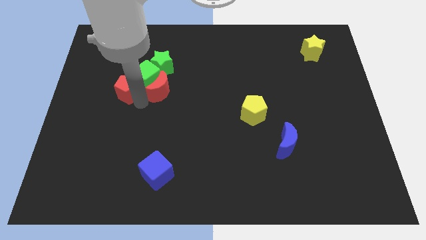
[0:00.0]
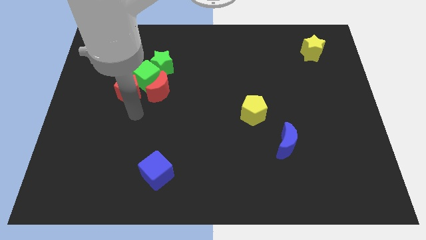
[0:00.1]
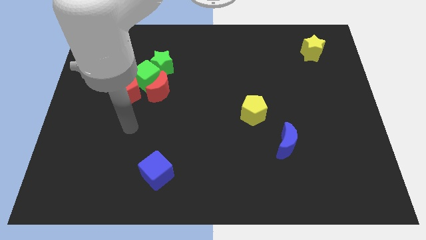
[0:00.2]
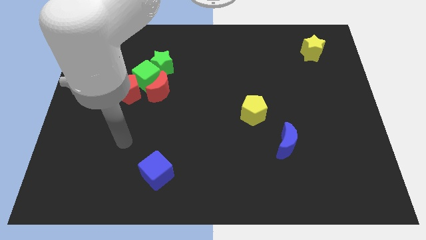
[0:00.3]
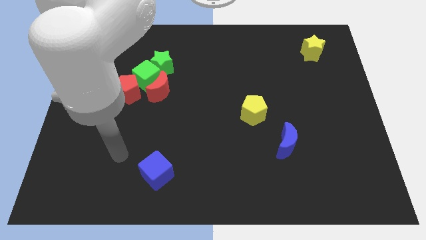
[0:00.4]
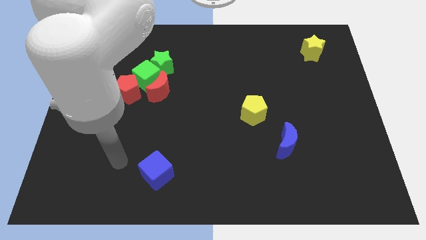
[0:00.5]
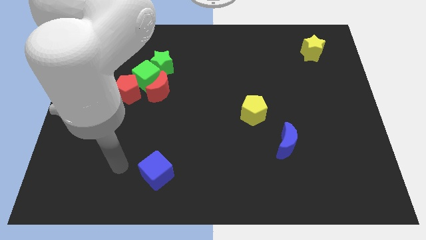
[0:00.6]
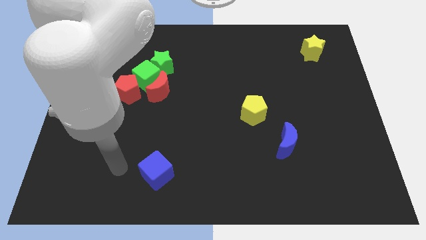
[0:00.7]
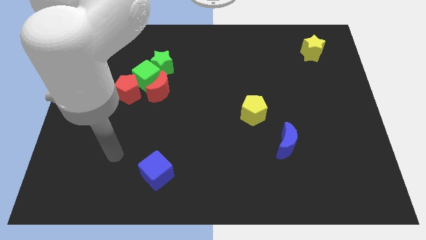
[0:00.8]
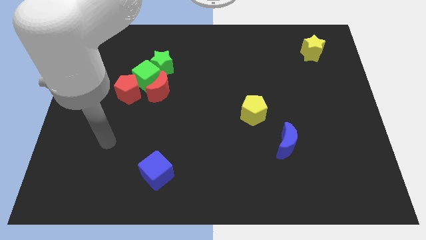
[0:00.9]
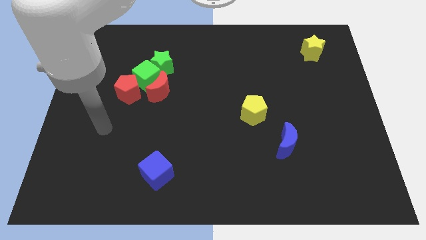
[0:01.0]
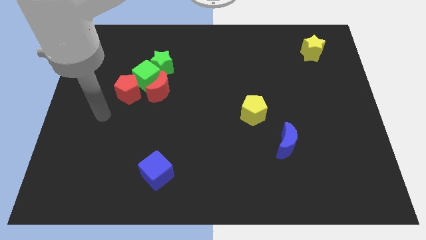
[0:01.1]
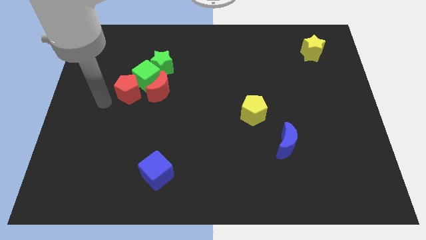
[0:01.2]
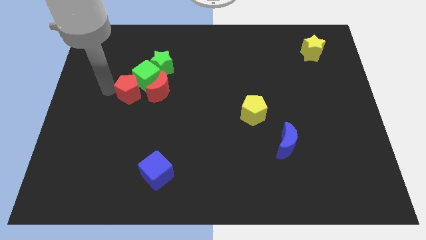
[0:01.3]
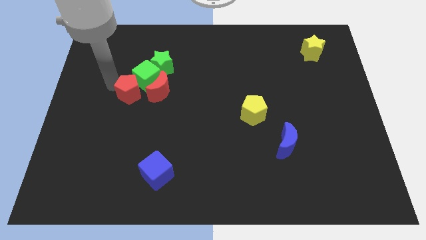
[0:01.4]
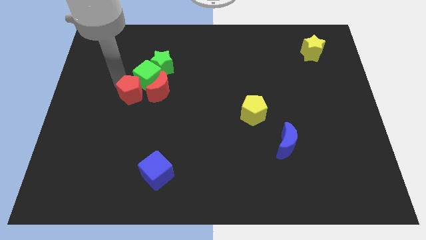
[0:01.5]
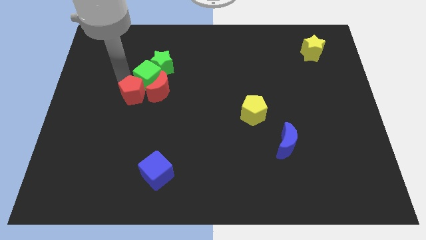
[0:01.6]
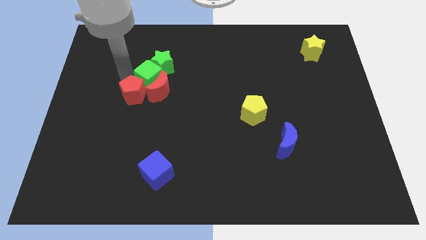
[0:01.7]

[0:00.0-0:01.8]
place your arm above red pentagon

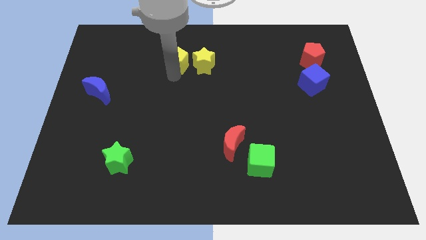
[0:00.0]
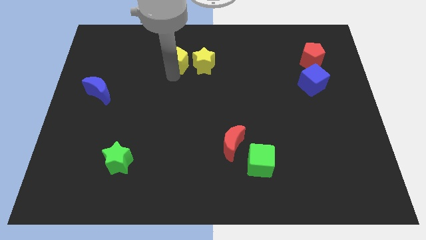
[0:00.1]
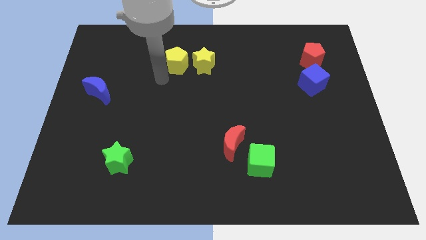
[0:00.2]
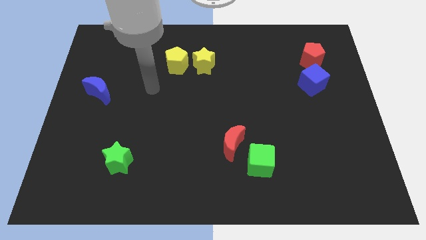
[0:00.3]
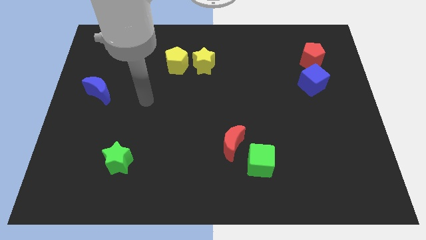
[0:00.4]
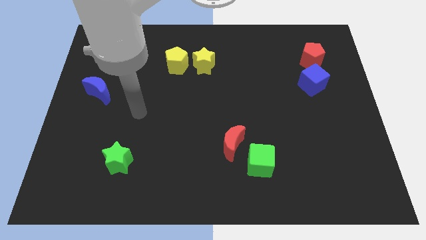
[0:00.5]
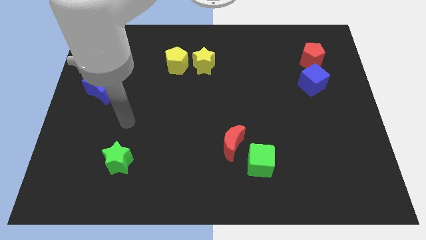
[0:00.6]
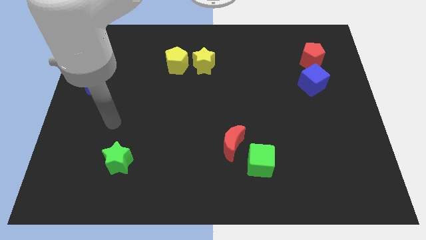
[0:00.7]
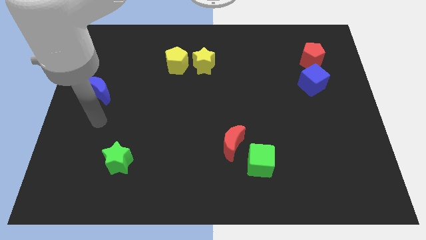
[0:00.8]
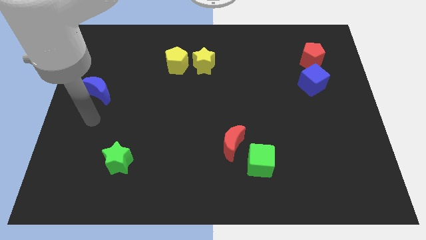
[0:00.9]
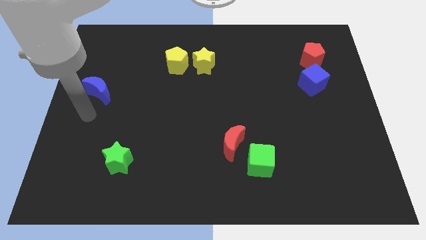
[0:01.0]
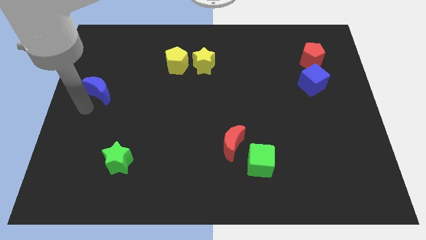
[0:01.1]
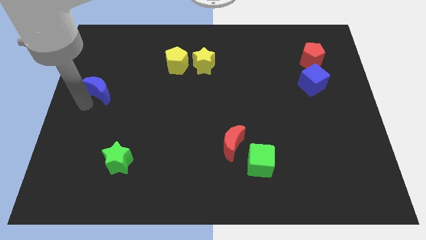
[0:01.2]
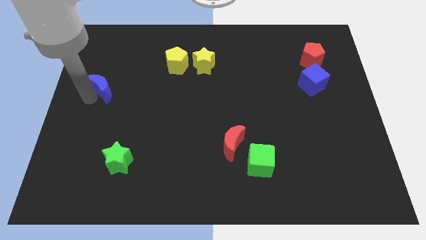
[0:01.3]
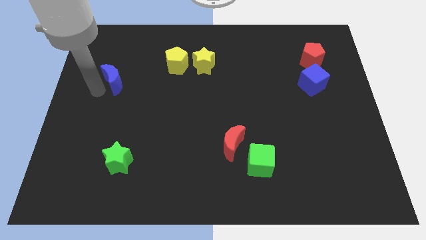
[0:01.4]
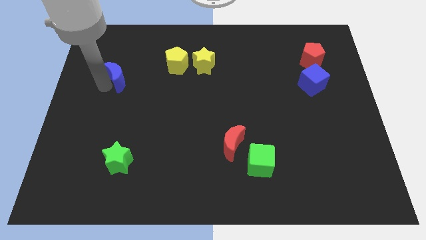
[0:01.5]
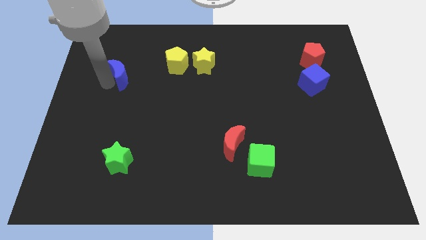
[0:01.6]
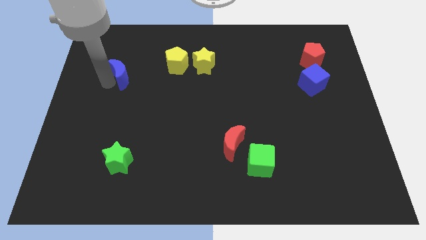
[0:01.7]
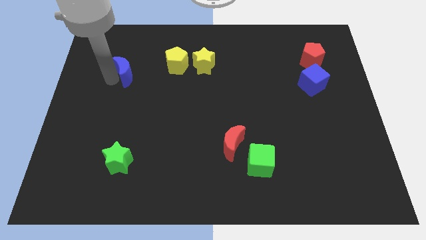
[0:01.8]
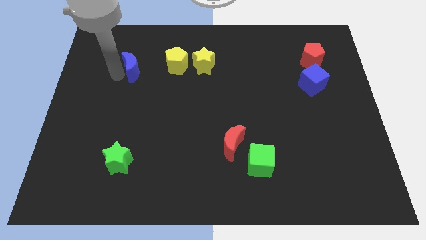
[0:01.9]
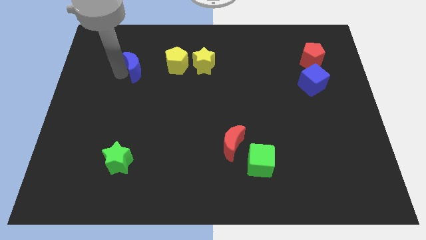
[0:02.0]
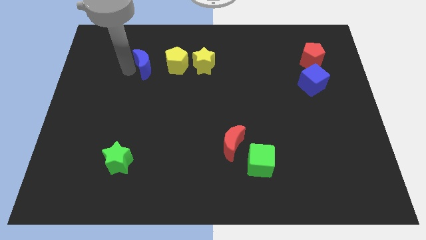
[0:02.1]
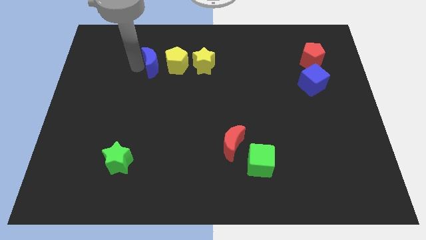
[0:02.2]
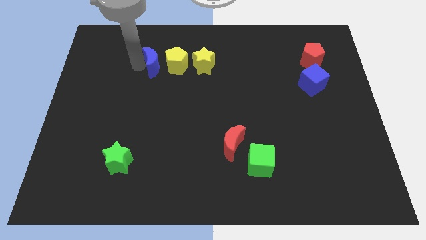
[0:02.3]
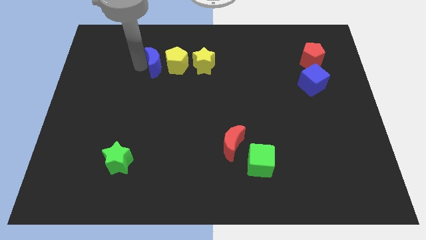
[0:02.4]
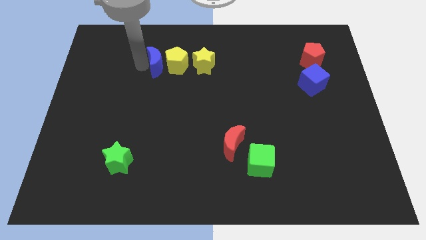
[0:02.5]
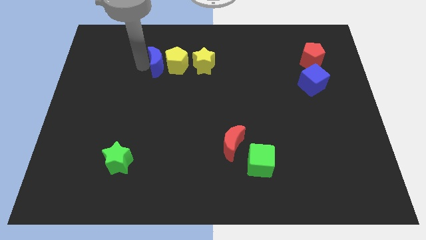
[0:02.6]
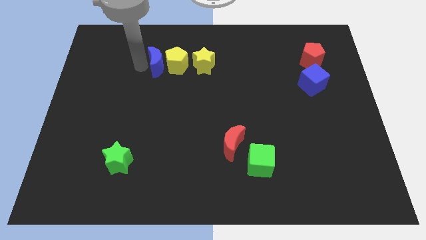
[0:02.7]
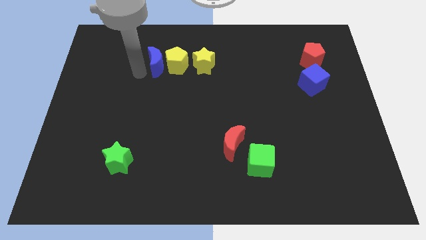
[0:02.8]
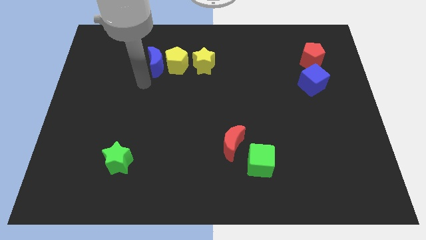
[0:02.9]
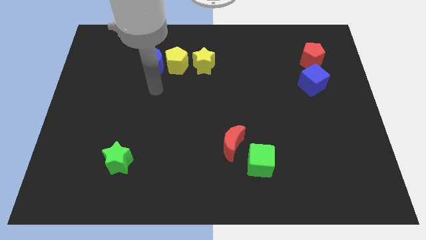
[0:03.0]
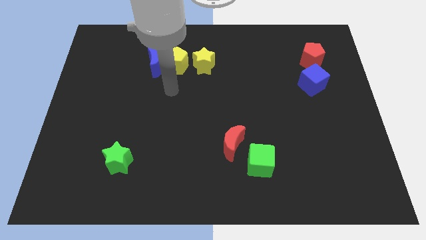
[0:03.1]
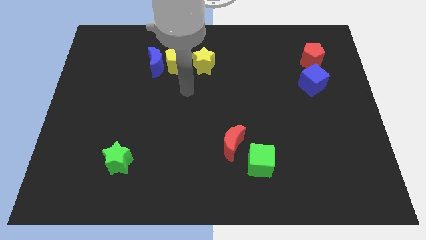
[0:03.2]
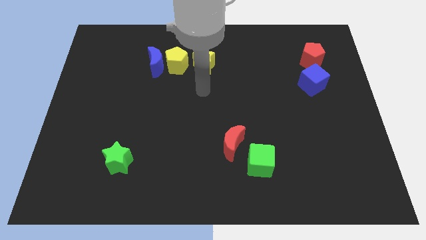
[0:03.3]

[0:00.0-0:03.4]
place the blue crescent to the left of the yellow pentagon

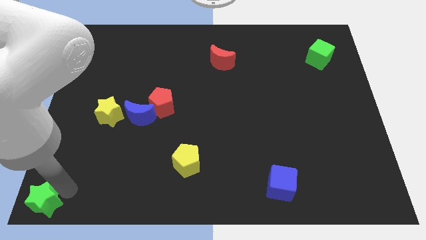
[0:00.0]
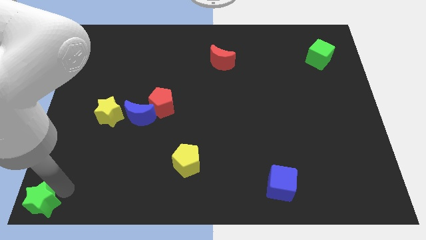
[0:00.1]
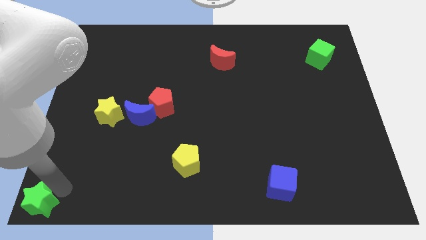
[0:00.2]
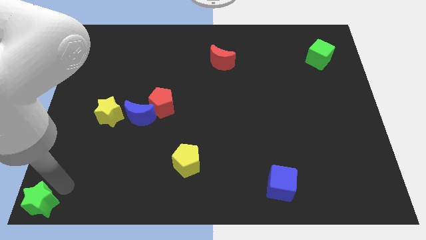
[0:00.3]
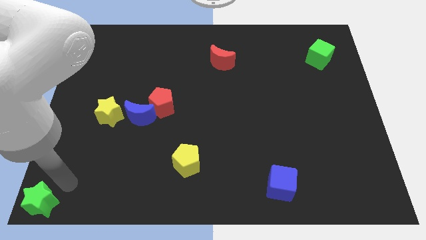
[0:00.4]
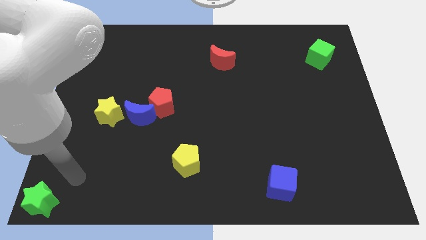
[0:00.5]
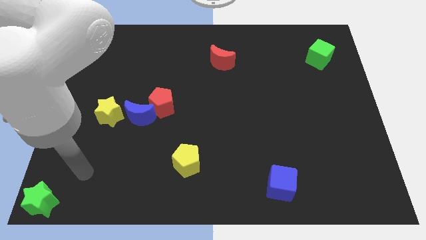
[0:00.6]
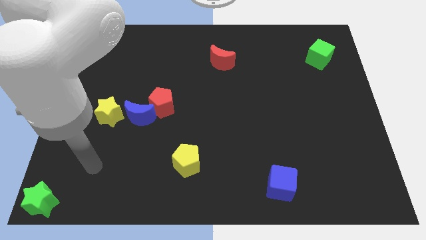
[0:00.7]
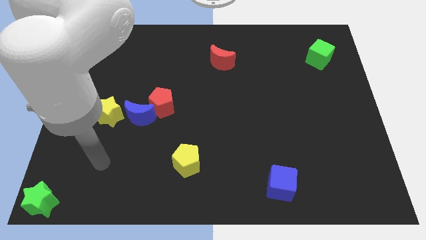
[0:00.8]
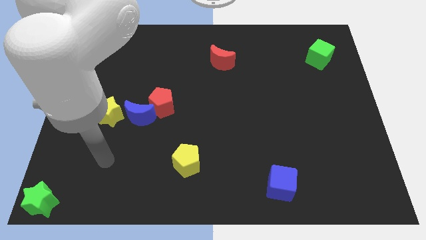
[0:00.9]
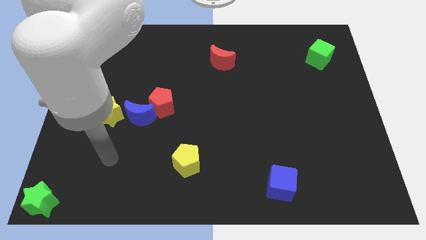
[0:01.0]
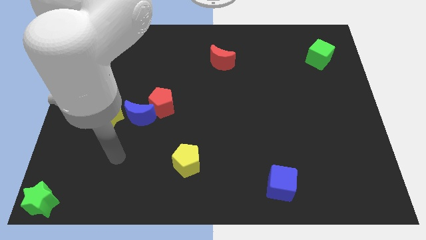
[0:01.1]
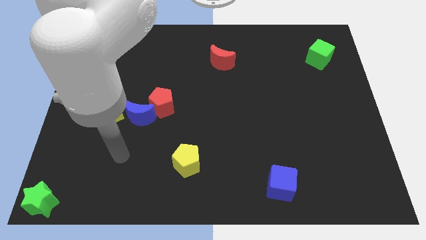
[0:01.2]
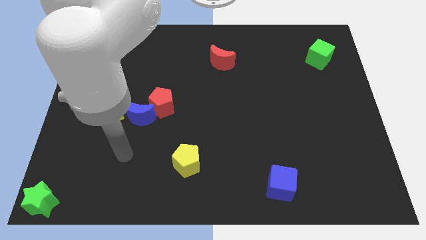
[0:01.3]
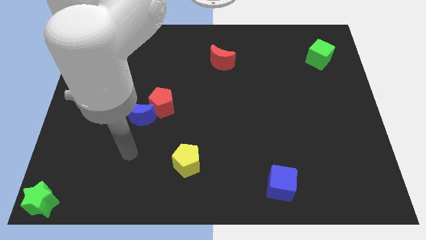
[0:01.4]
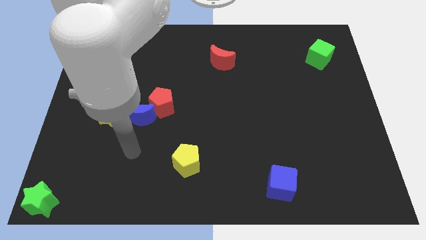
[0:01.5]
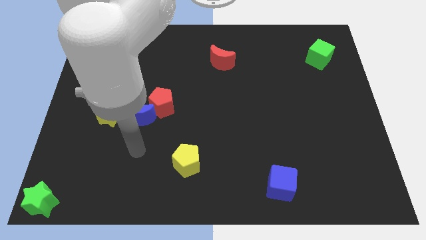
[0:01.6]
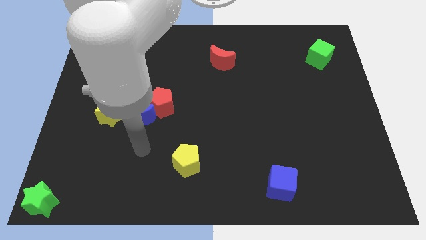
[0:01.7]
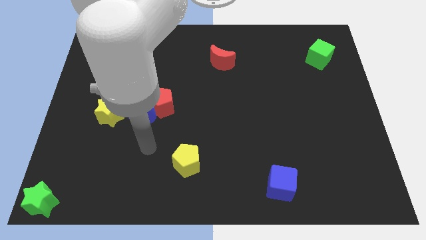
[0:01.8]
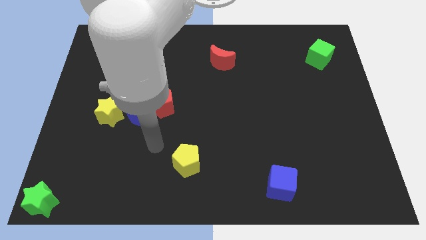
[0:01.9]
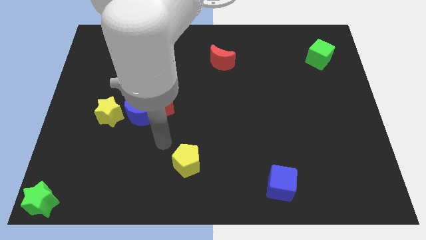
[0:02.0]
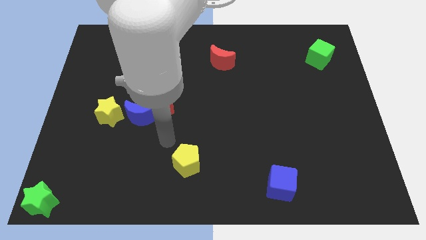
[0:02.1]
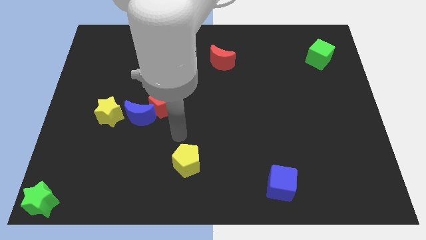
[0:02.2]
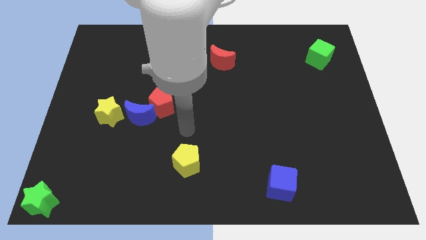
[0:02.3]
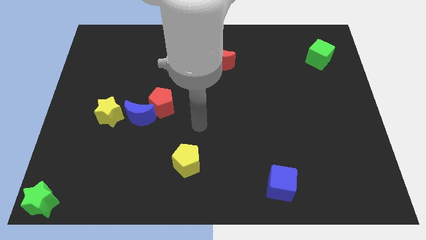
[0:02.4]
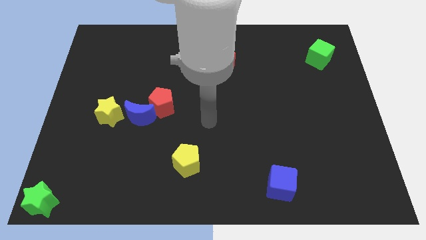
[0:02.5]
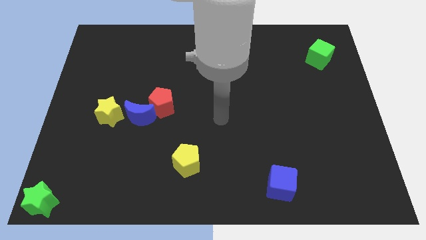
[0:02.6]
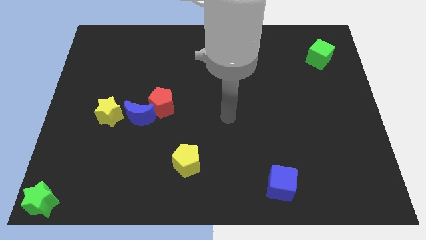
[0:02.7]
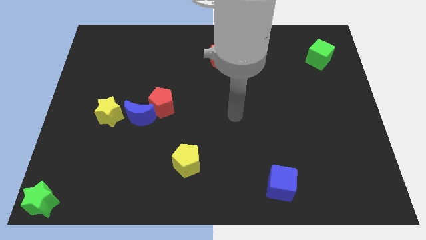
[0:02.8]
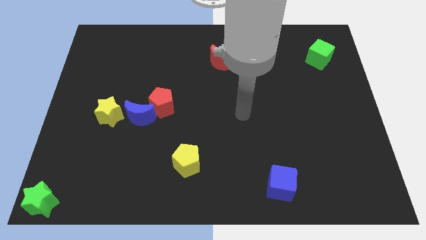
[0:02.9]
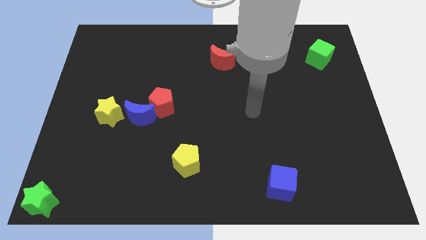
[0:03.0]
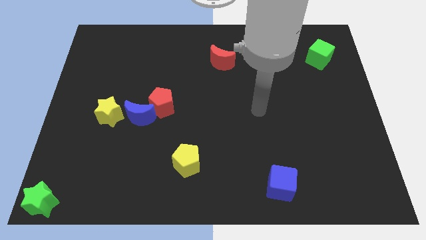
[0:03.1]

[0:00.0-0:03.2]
drag arm towards the right of the board

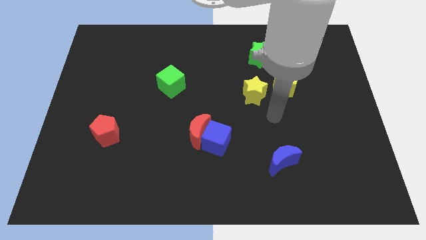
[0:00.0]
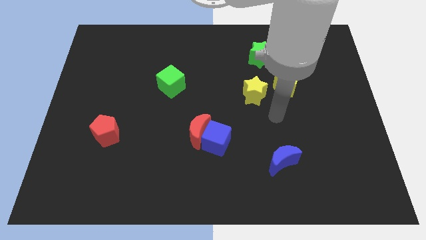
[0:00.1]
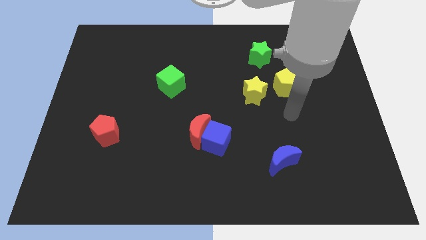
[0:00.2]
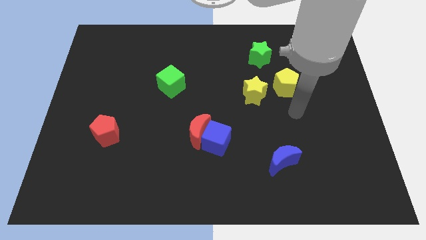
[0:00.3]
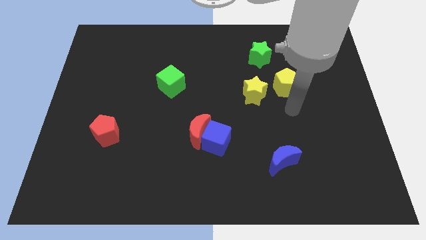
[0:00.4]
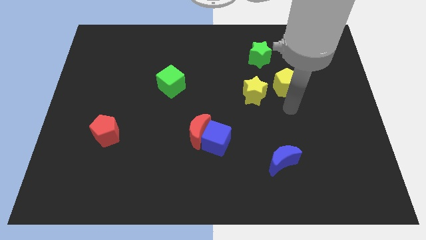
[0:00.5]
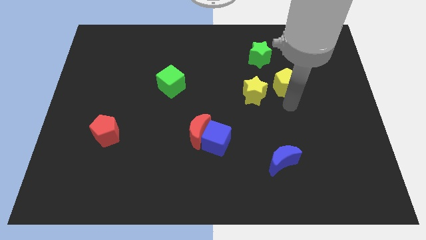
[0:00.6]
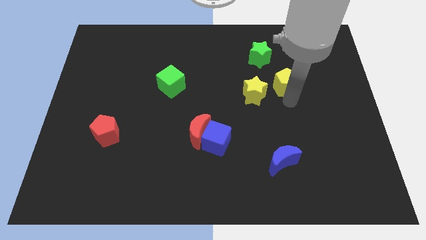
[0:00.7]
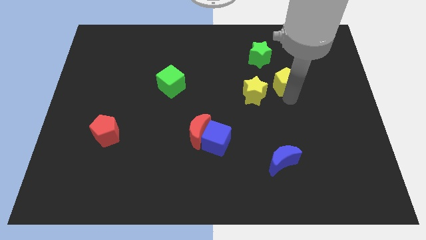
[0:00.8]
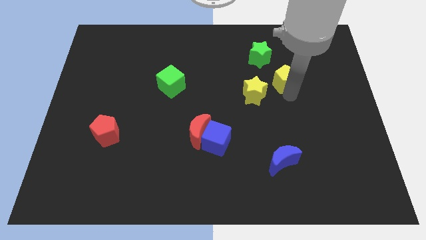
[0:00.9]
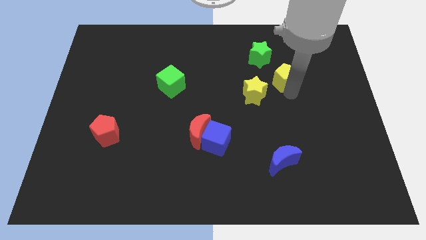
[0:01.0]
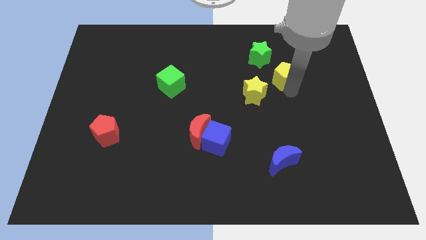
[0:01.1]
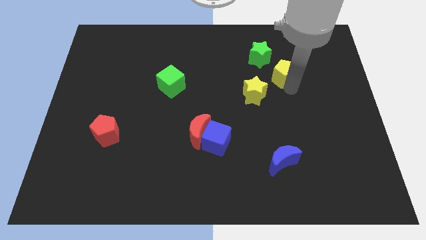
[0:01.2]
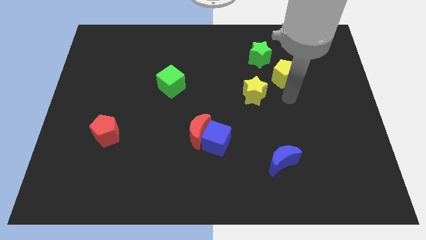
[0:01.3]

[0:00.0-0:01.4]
move the yellow pentagon slightly up
